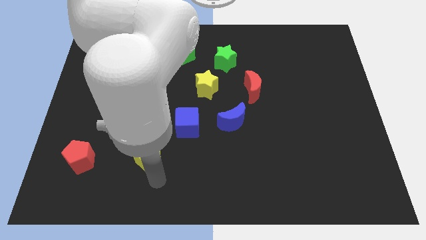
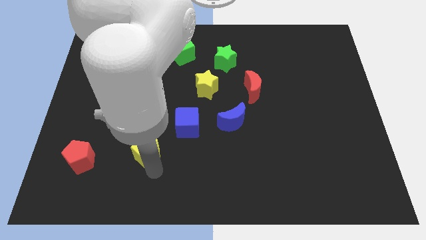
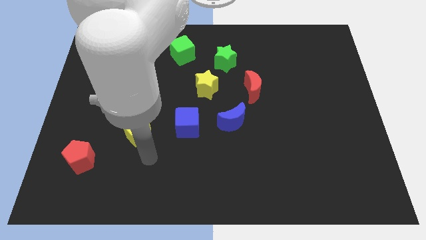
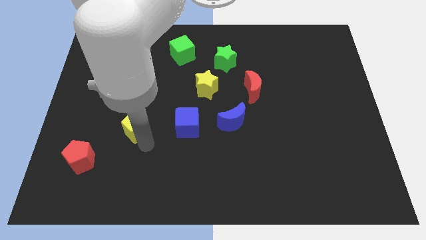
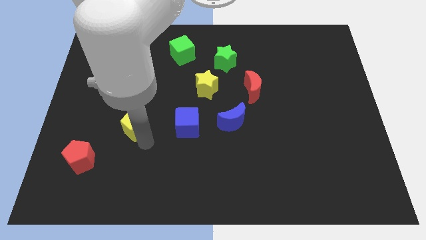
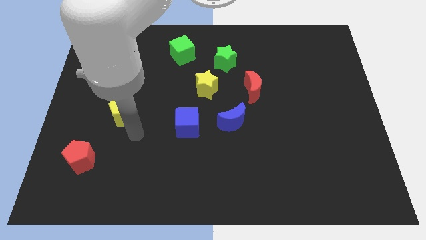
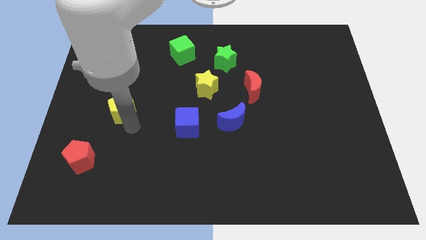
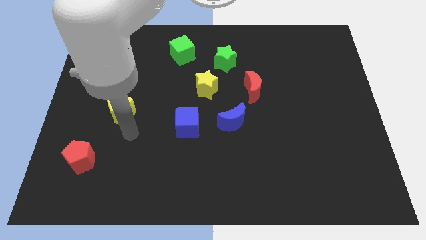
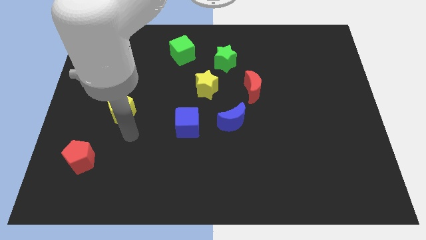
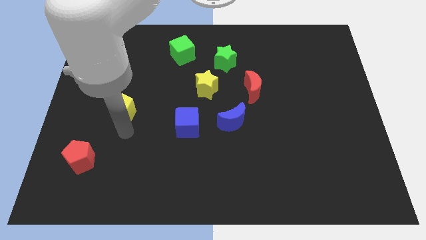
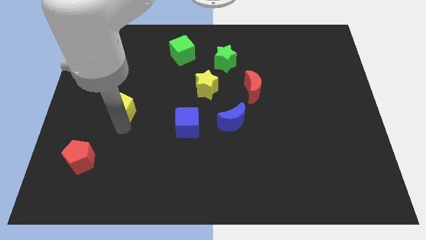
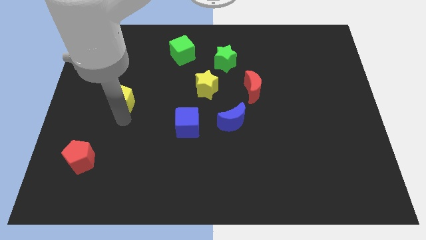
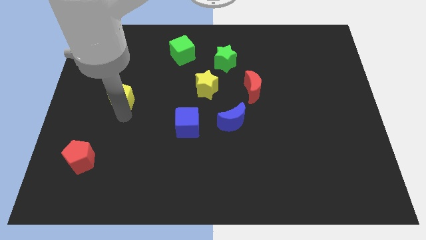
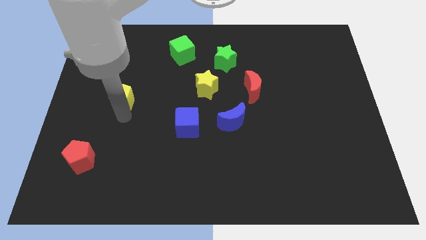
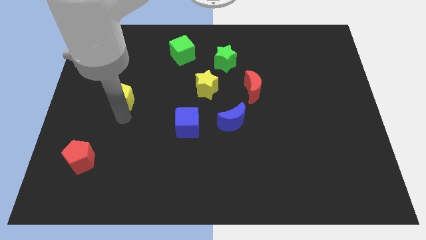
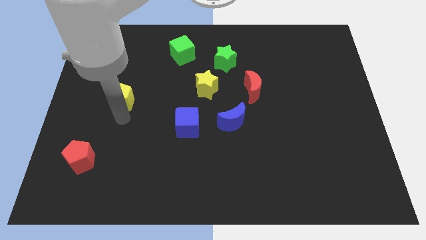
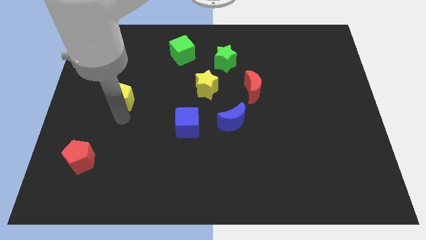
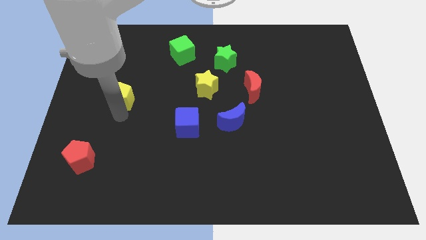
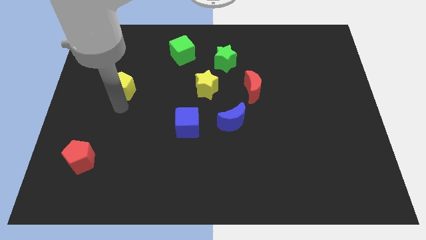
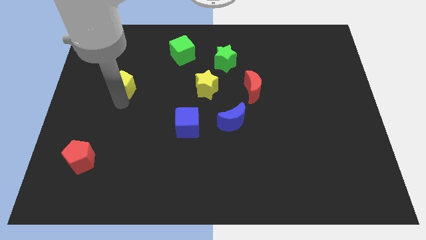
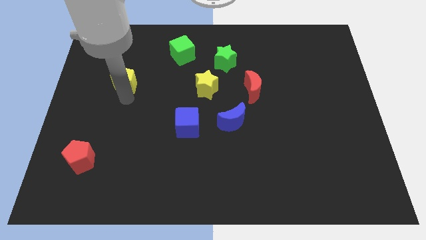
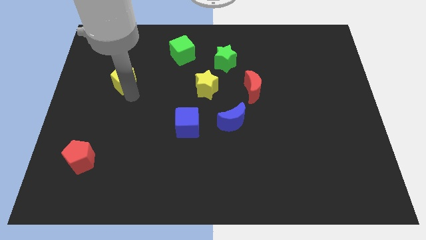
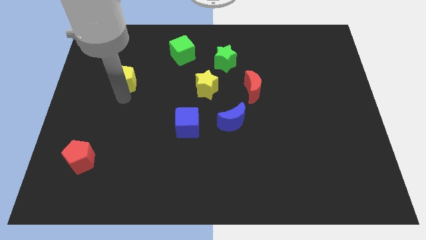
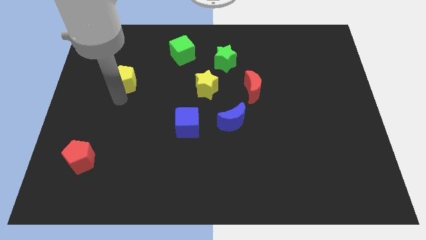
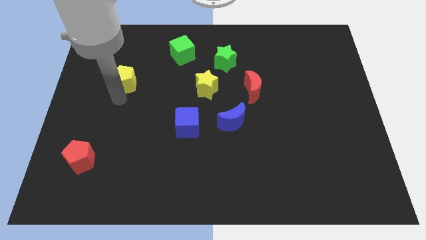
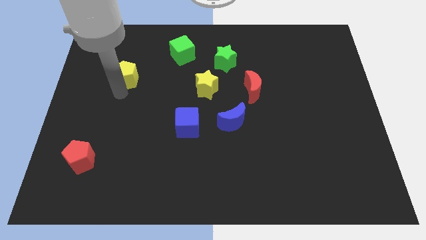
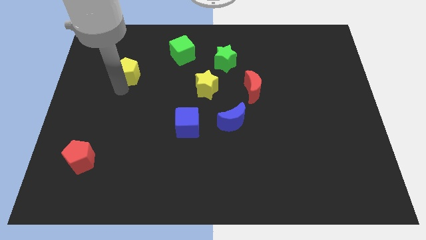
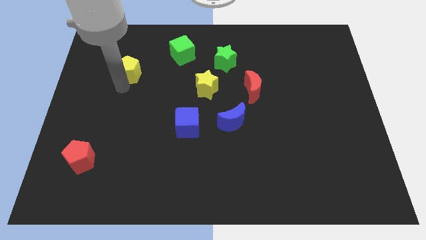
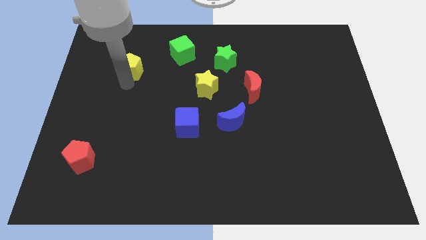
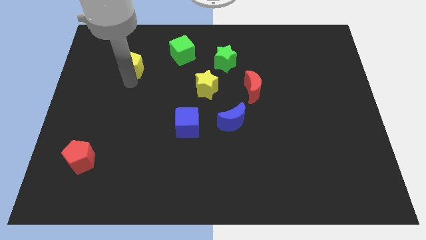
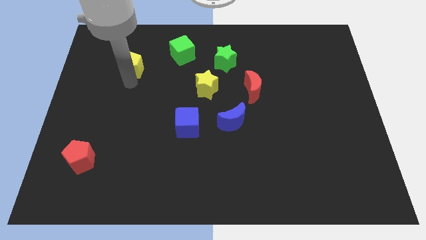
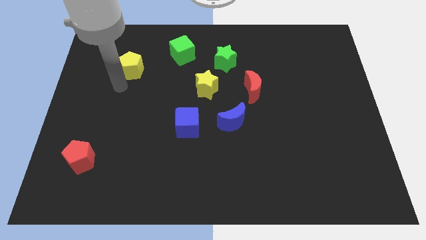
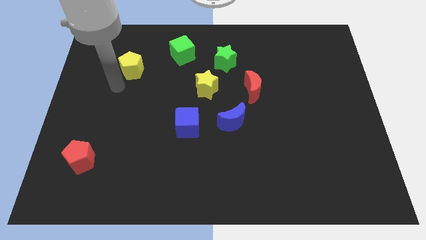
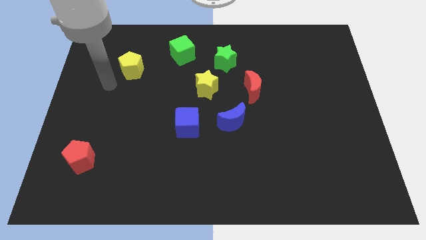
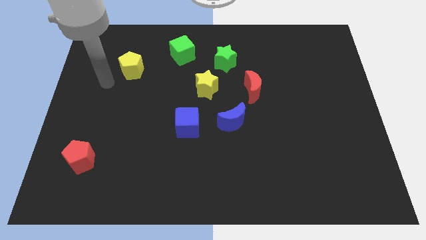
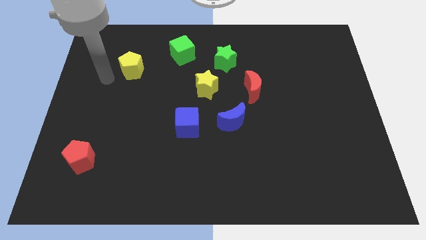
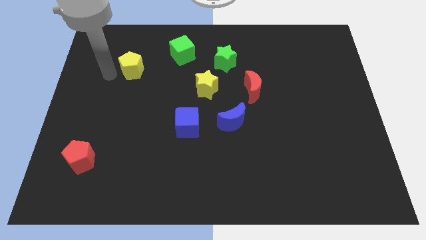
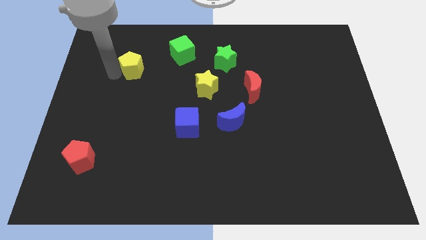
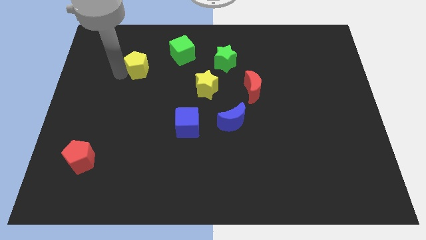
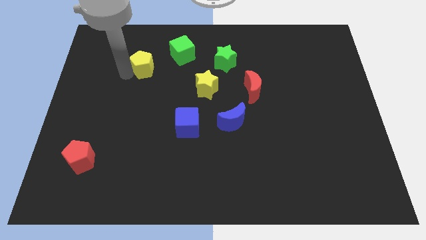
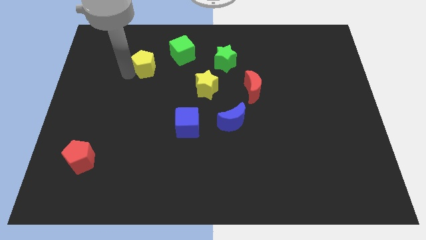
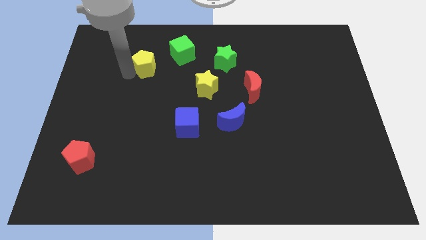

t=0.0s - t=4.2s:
push the yellow pentagon to the left of the green cube

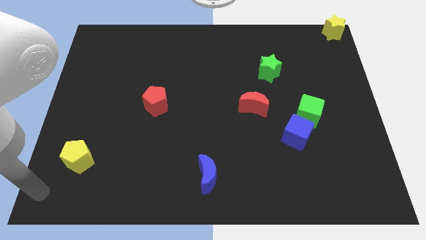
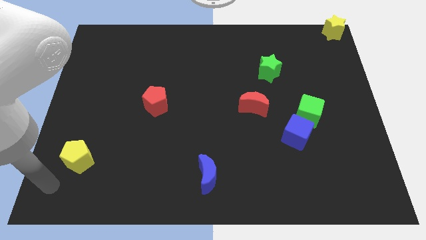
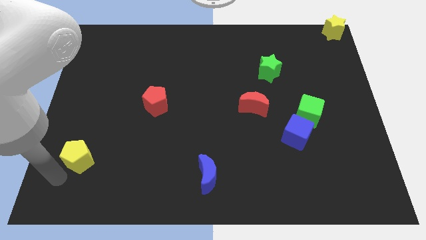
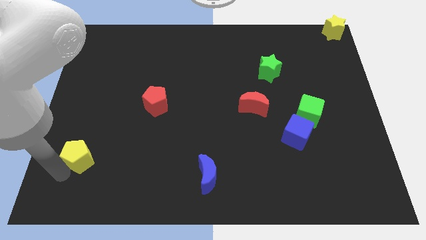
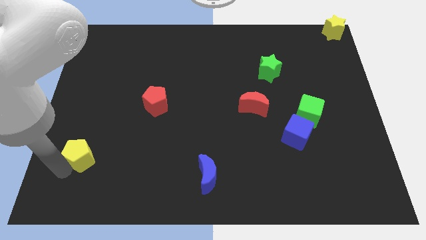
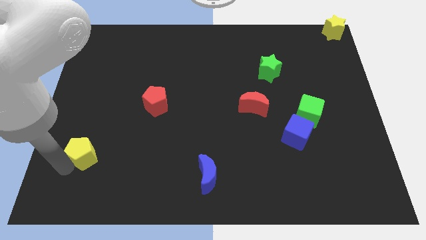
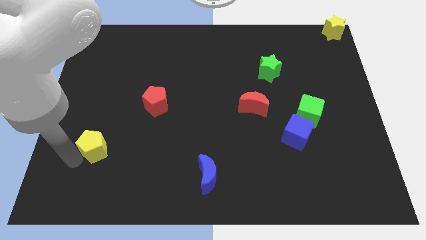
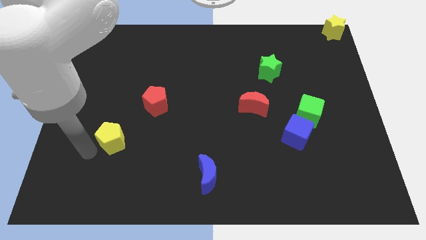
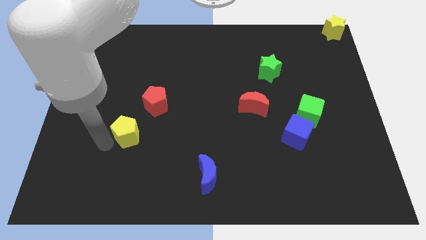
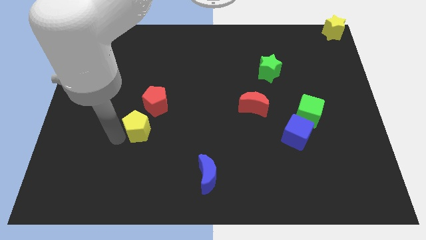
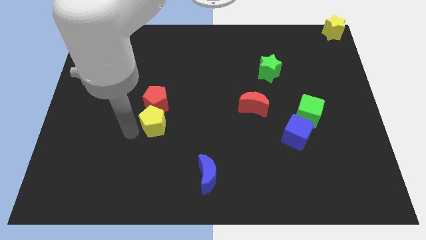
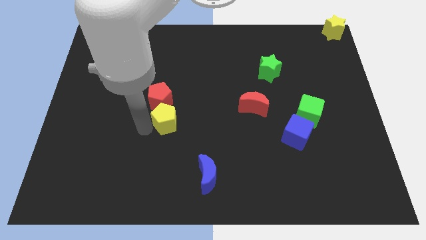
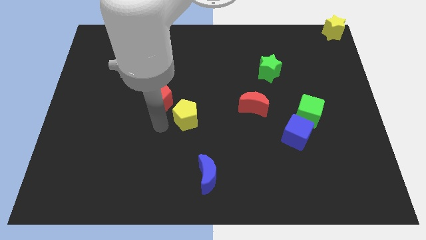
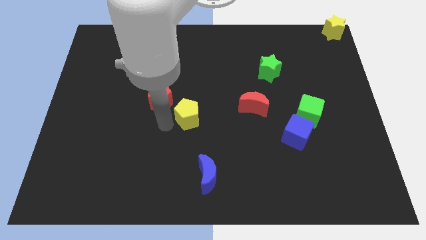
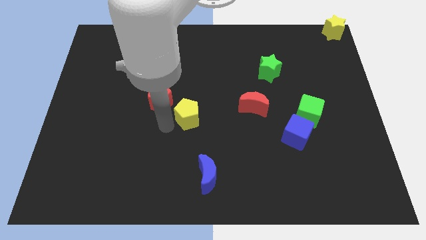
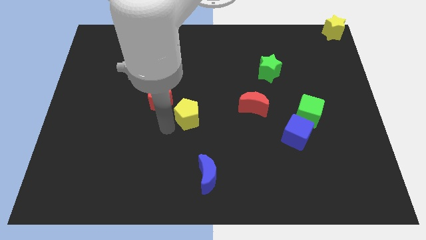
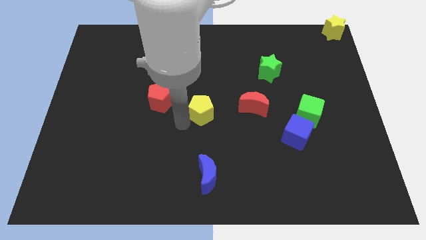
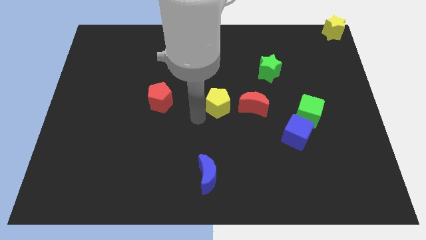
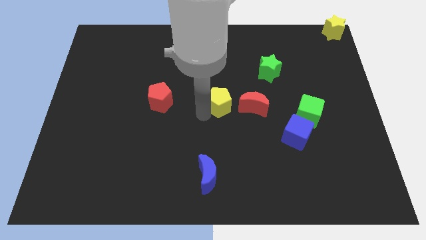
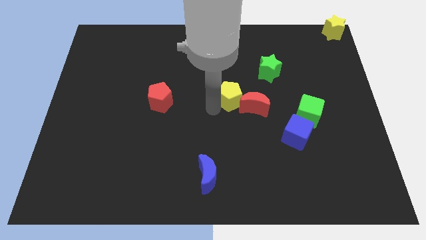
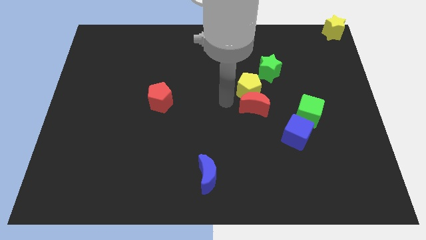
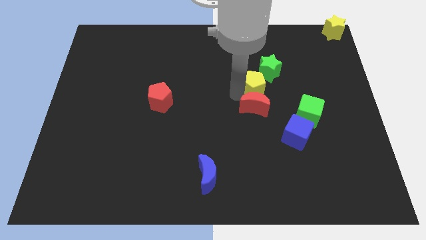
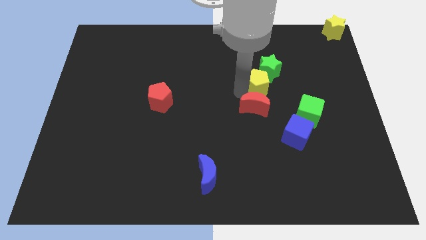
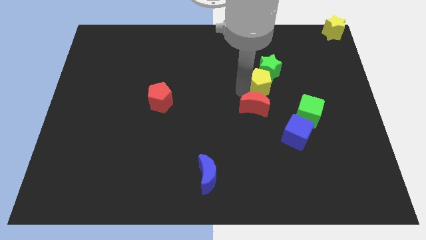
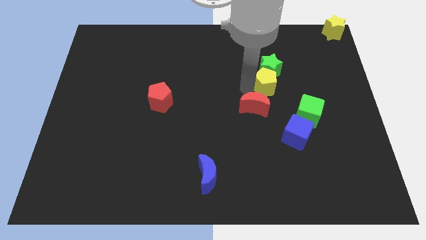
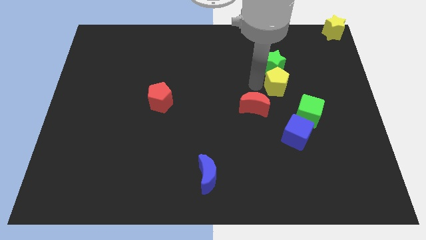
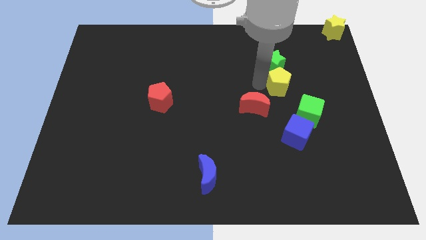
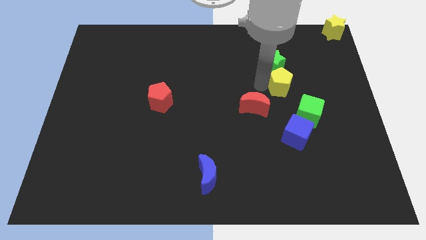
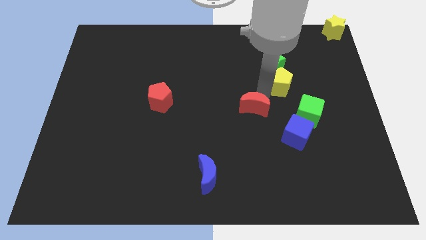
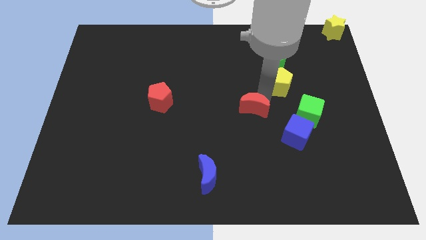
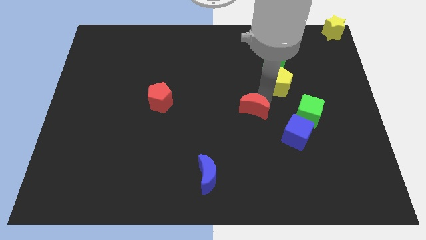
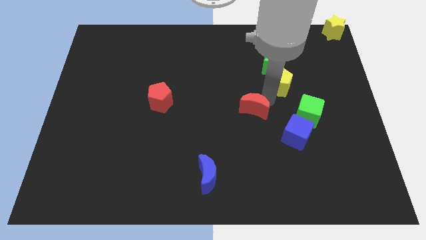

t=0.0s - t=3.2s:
place yellow pentagon to the bottom of the green star

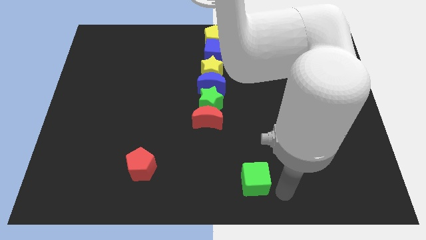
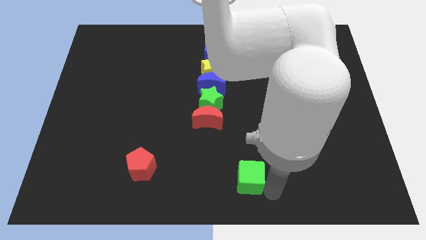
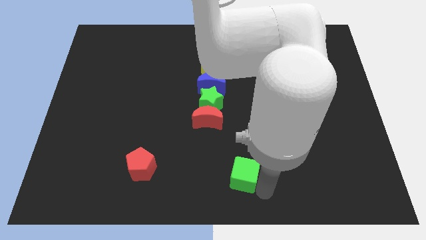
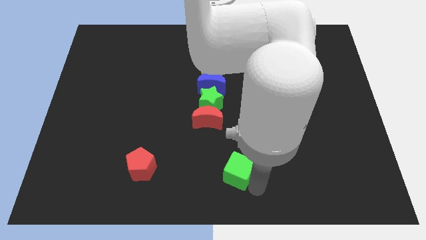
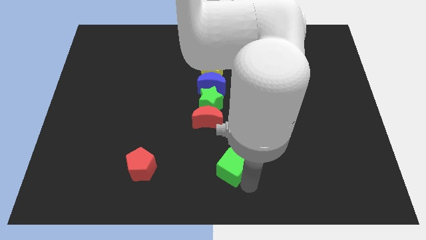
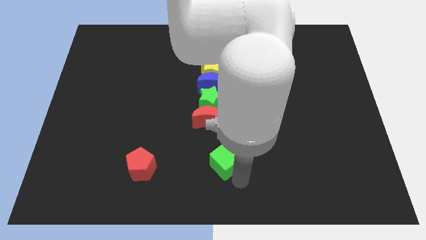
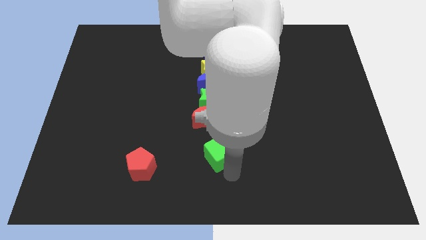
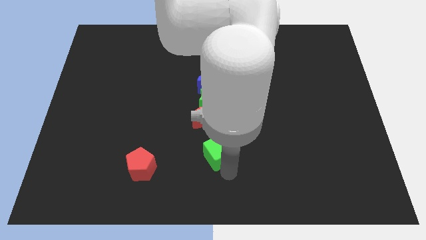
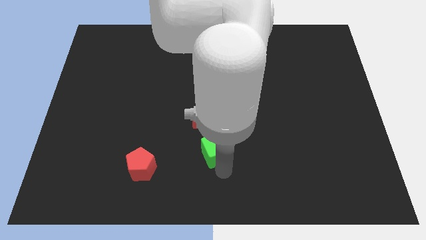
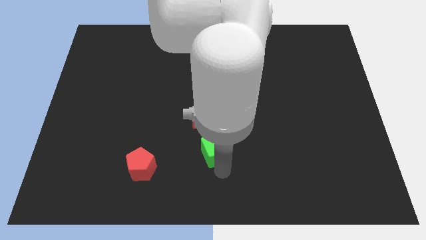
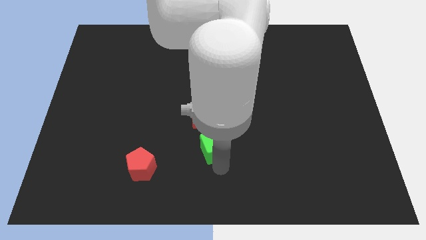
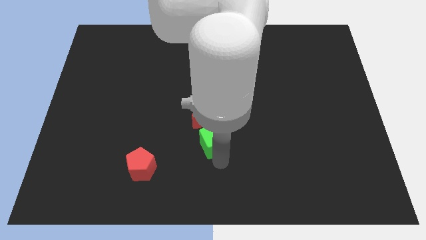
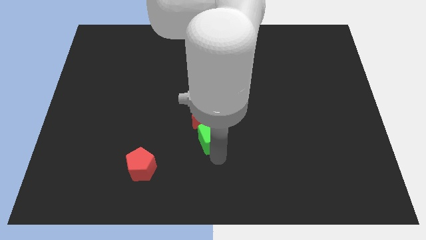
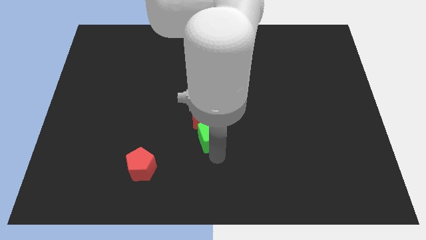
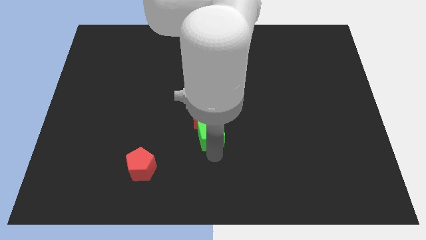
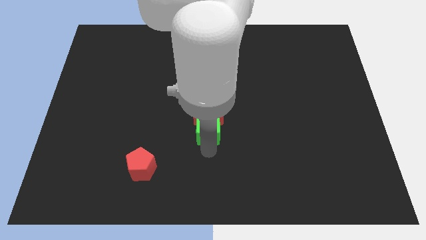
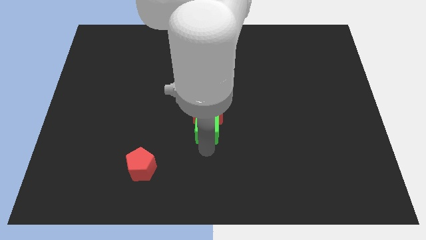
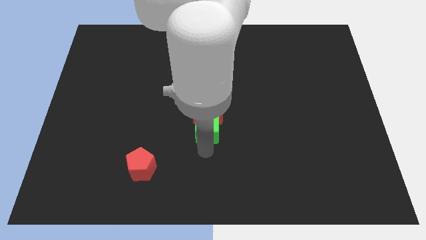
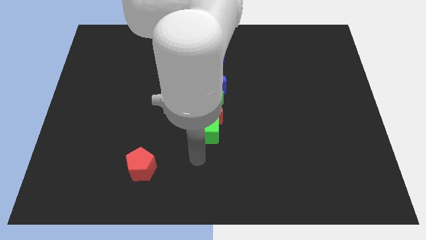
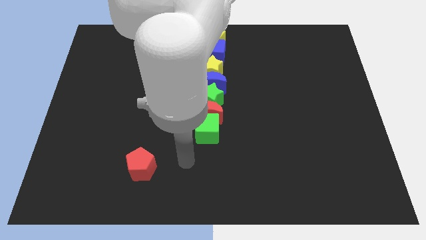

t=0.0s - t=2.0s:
move the green cube below the red crescent
